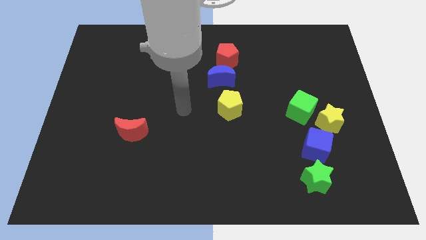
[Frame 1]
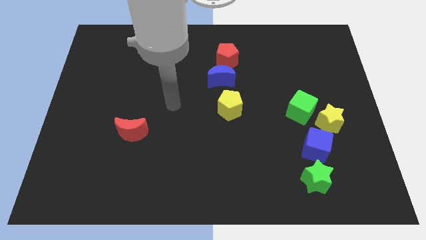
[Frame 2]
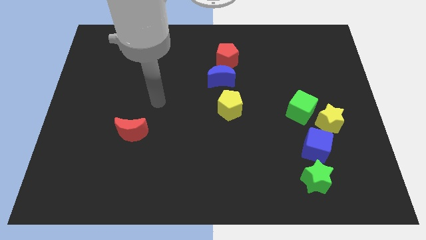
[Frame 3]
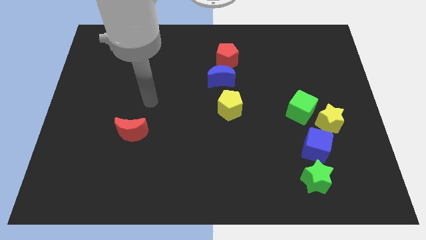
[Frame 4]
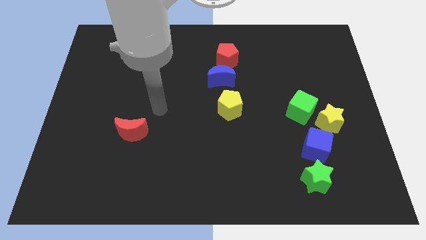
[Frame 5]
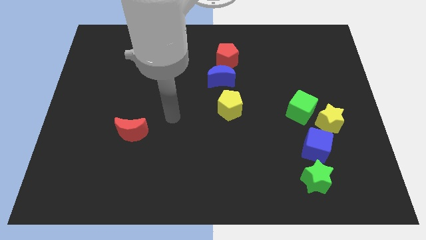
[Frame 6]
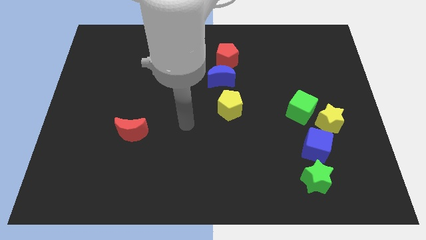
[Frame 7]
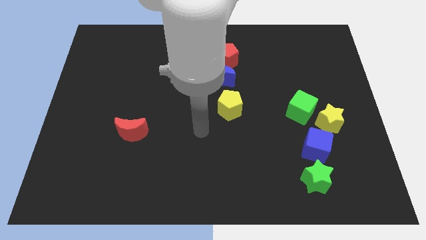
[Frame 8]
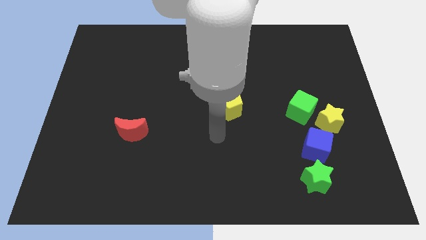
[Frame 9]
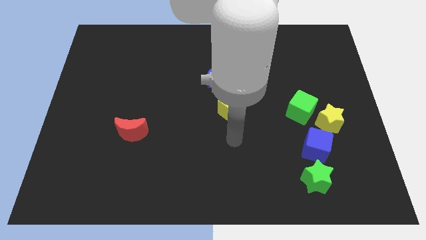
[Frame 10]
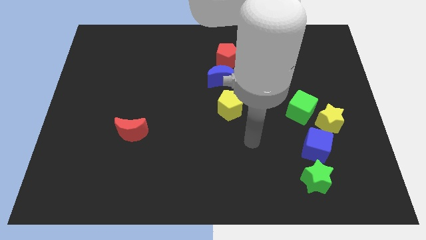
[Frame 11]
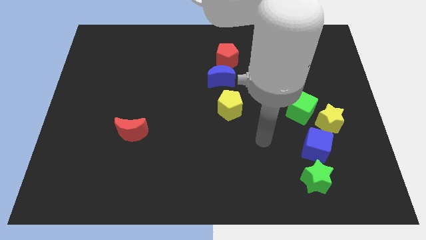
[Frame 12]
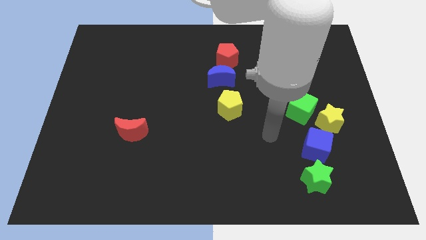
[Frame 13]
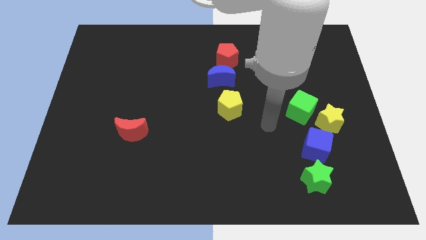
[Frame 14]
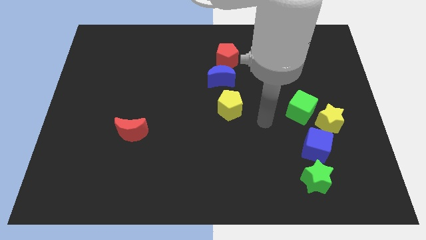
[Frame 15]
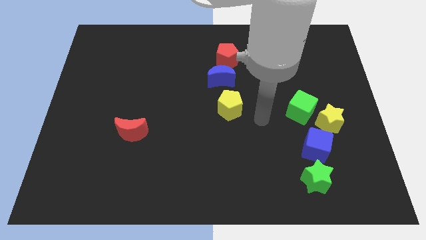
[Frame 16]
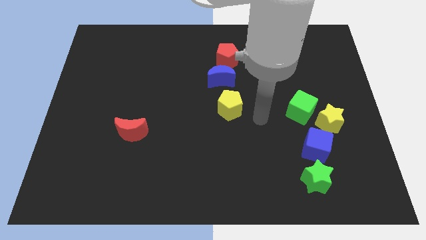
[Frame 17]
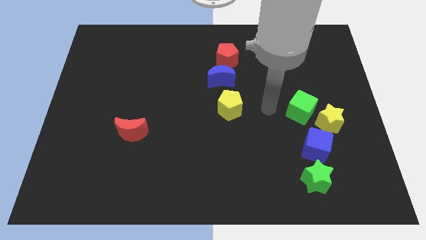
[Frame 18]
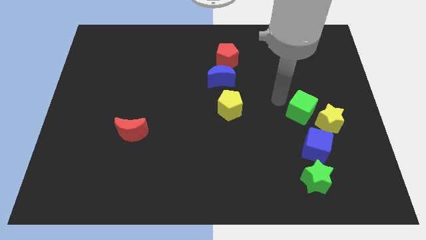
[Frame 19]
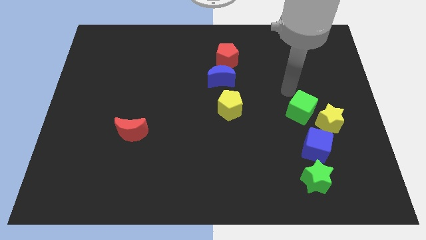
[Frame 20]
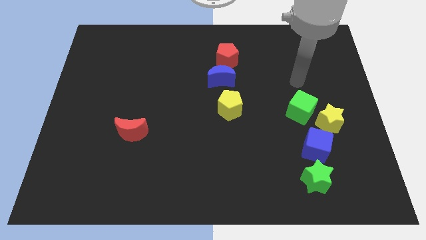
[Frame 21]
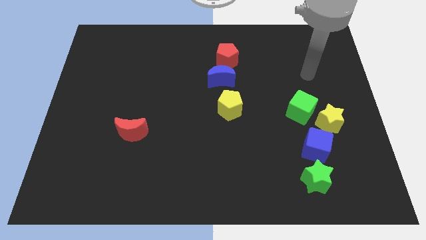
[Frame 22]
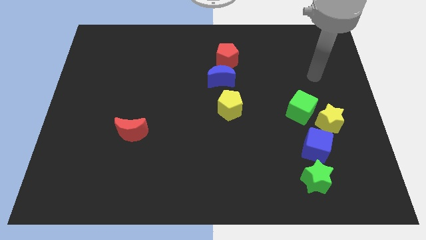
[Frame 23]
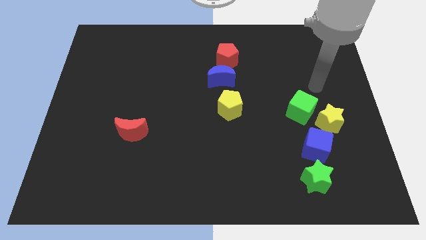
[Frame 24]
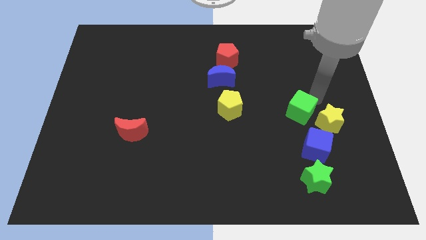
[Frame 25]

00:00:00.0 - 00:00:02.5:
place your arm to the top of green cube

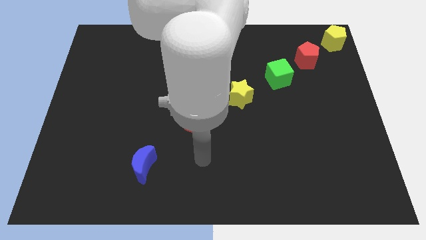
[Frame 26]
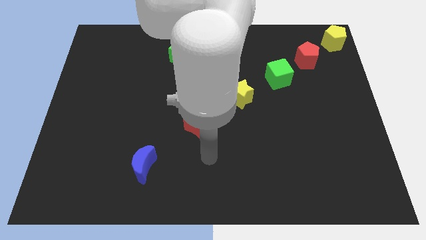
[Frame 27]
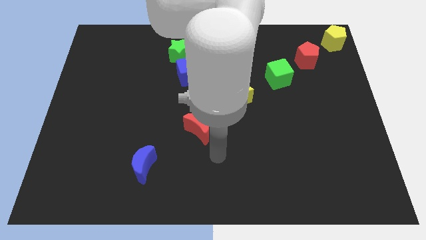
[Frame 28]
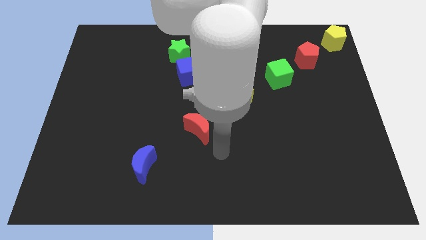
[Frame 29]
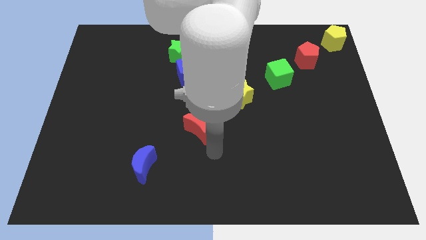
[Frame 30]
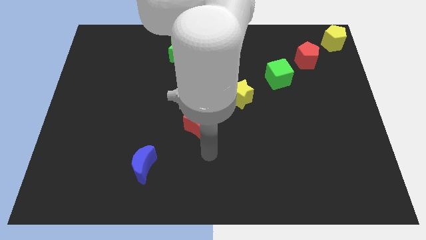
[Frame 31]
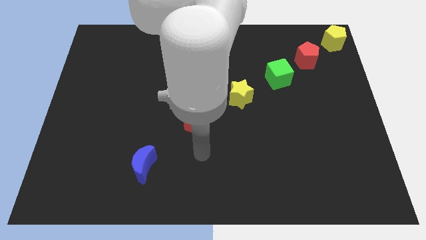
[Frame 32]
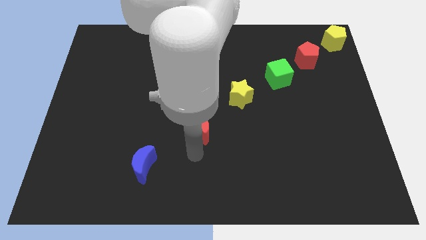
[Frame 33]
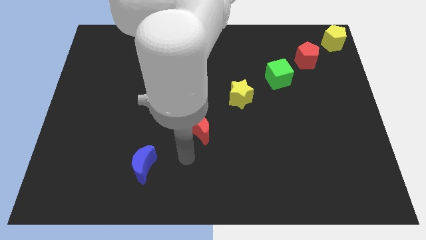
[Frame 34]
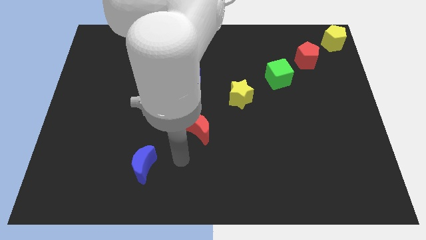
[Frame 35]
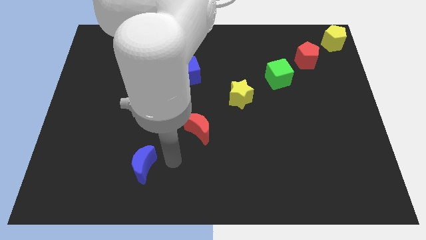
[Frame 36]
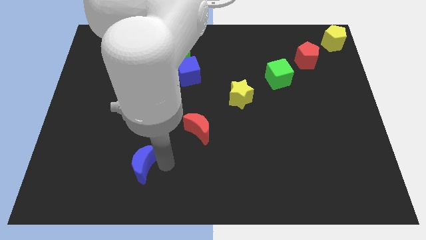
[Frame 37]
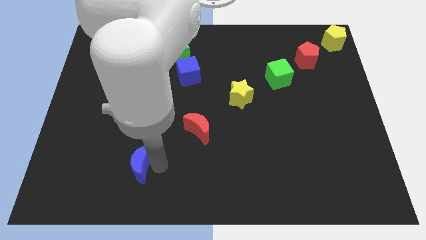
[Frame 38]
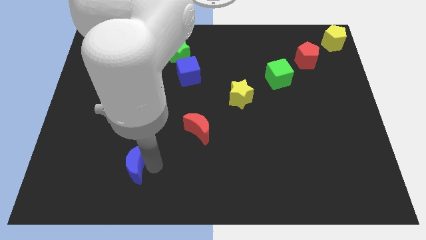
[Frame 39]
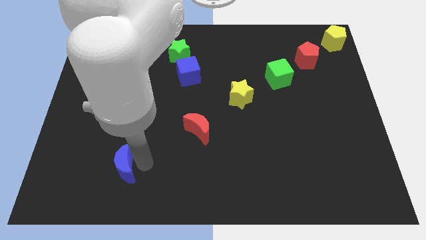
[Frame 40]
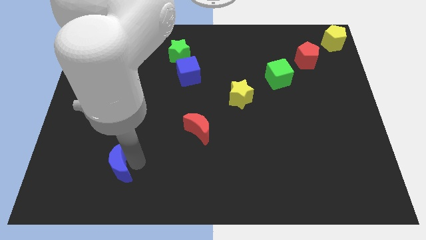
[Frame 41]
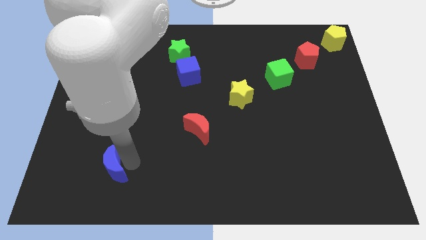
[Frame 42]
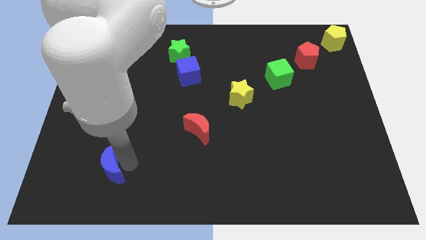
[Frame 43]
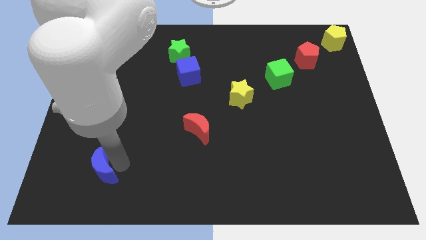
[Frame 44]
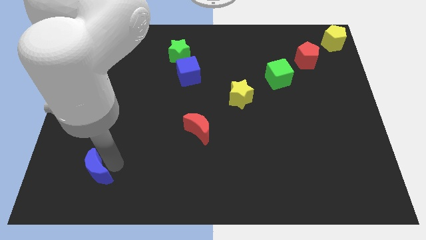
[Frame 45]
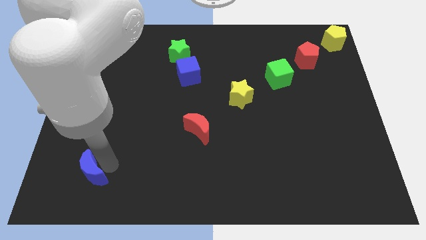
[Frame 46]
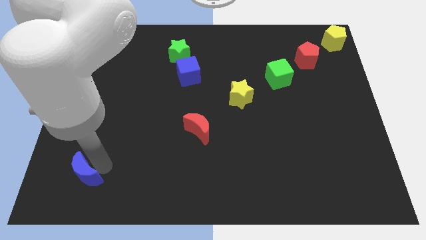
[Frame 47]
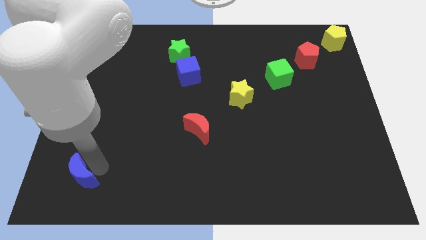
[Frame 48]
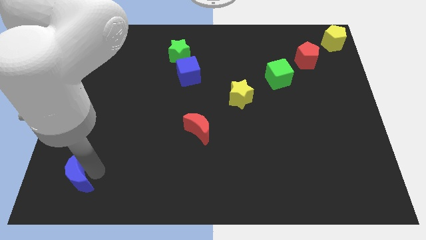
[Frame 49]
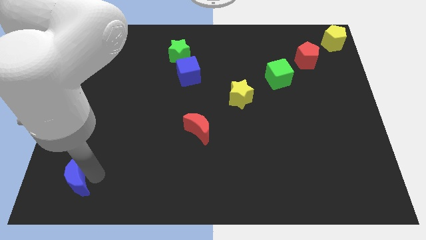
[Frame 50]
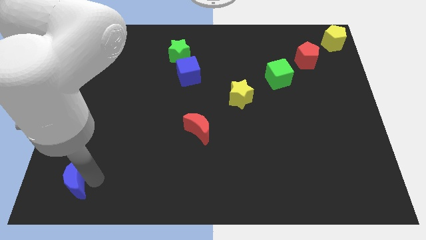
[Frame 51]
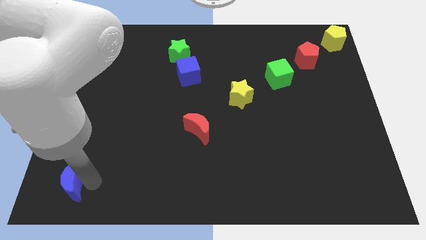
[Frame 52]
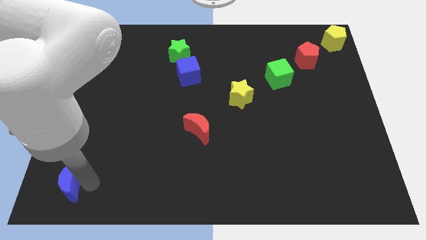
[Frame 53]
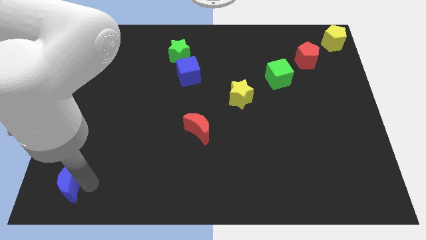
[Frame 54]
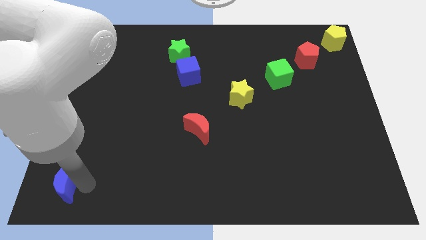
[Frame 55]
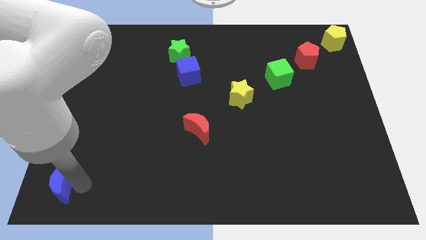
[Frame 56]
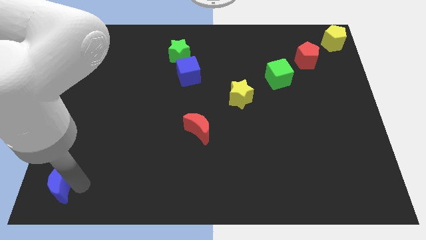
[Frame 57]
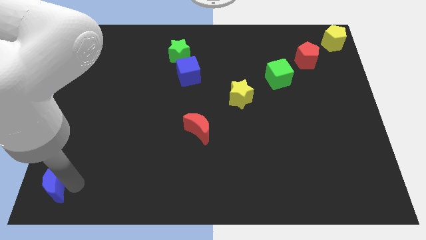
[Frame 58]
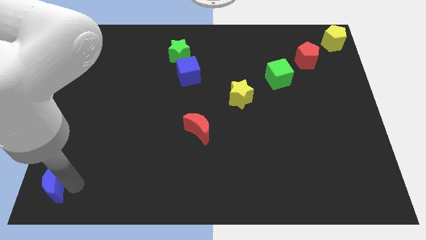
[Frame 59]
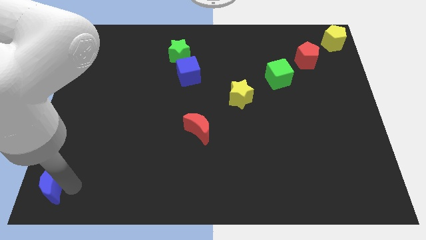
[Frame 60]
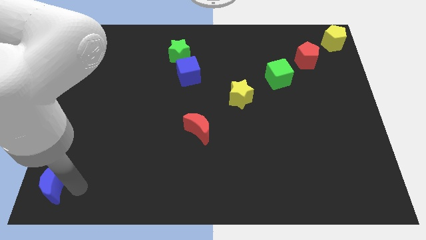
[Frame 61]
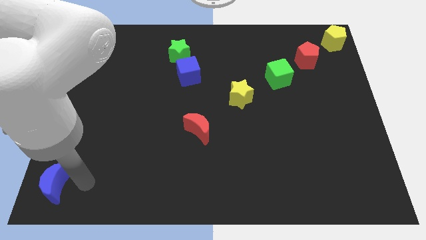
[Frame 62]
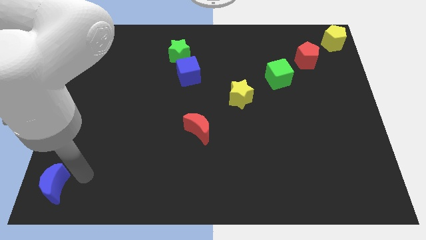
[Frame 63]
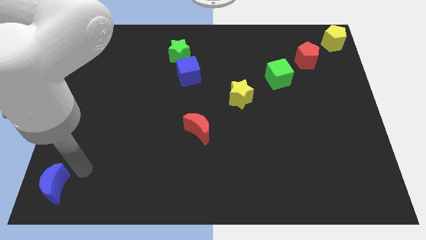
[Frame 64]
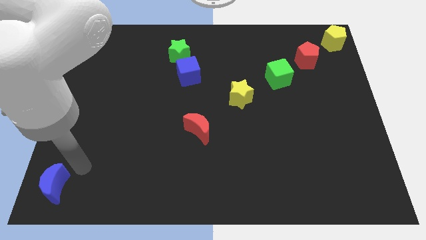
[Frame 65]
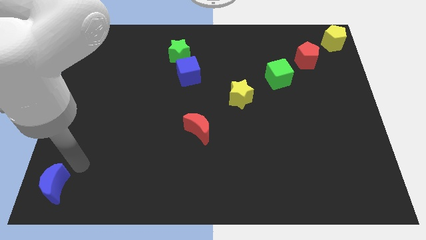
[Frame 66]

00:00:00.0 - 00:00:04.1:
push the blue crescent towards the bottom left corner of the board

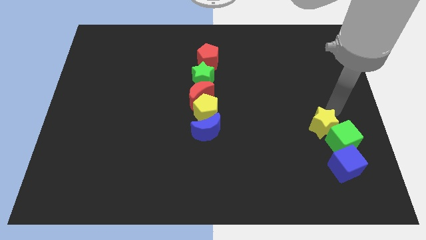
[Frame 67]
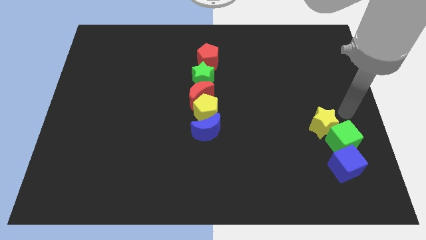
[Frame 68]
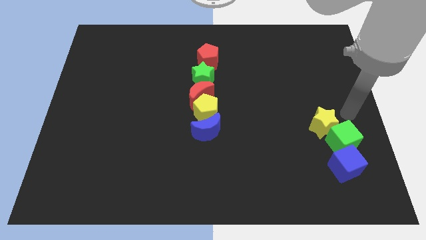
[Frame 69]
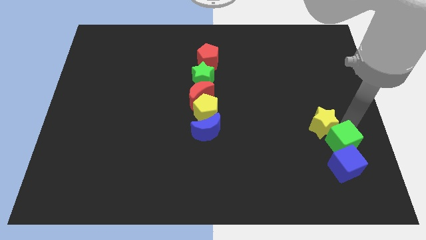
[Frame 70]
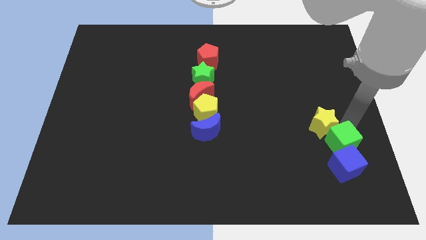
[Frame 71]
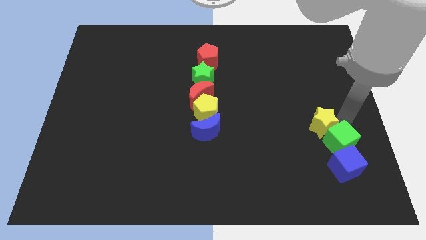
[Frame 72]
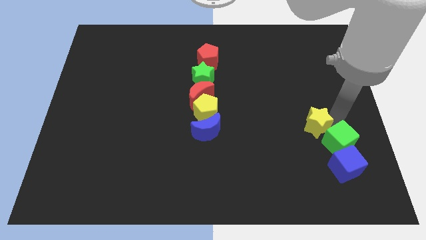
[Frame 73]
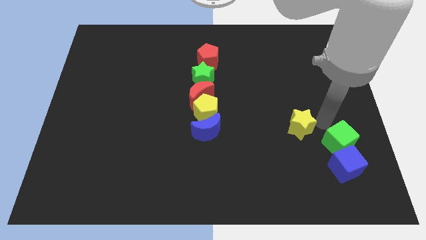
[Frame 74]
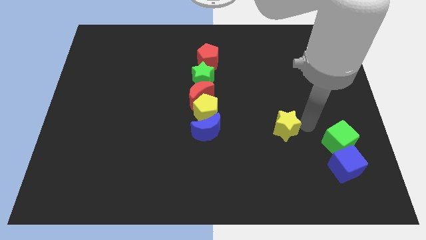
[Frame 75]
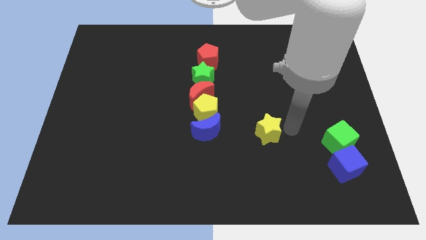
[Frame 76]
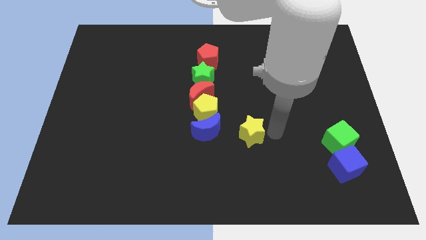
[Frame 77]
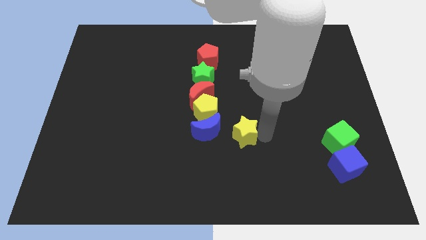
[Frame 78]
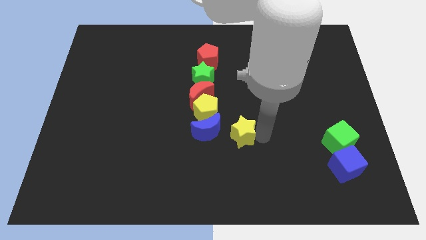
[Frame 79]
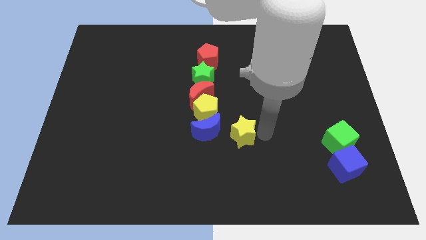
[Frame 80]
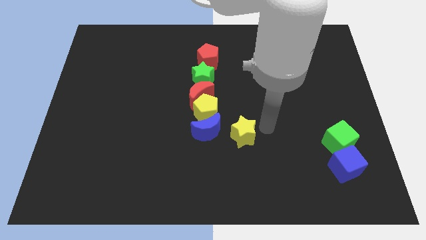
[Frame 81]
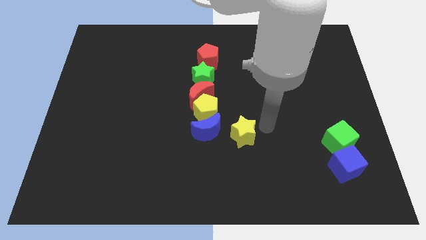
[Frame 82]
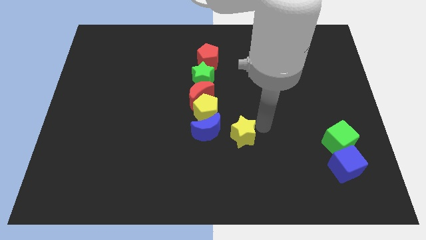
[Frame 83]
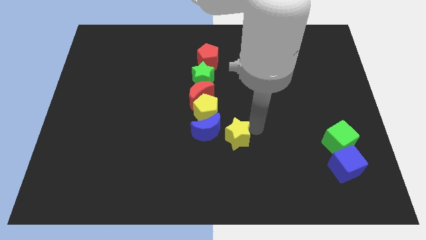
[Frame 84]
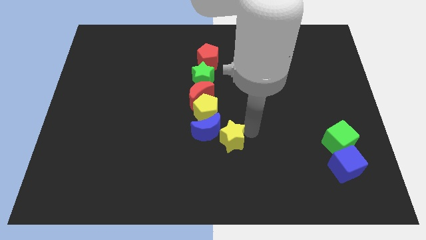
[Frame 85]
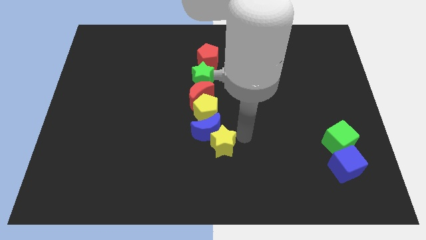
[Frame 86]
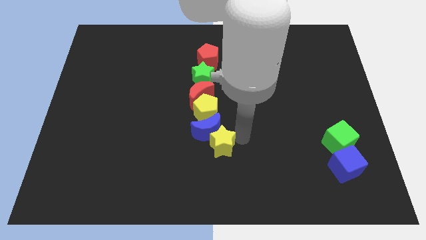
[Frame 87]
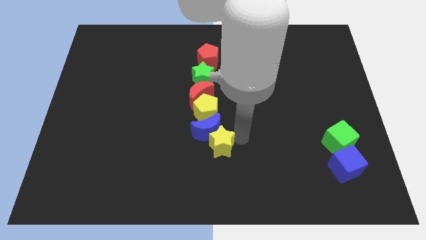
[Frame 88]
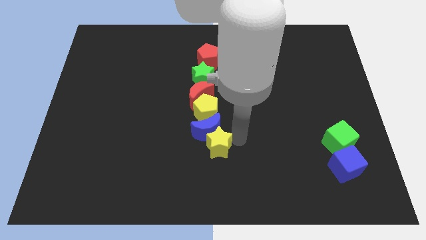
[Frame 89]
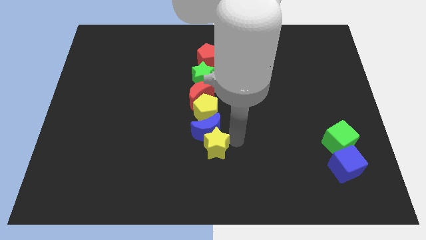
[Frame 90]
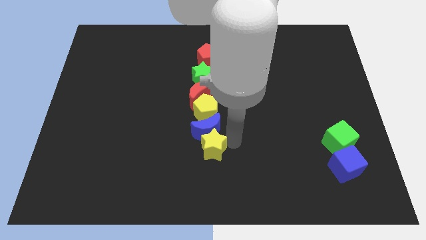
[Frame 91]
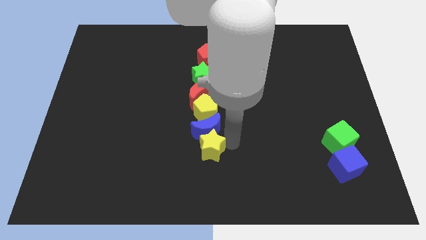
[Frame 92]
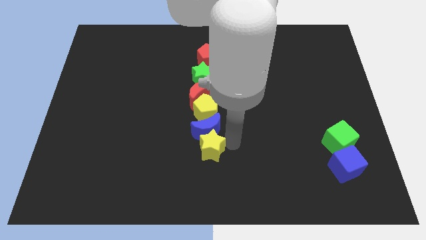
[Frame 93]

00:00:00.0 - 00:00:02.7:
place the yellow star below the blue semicircle
